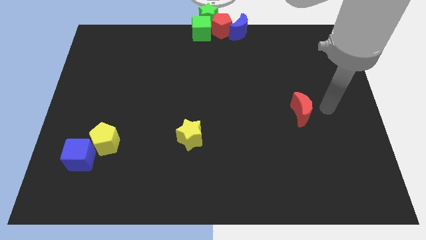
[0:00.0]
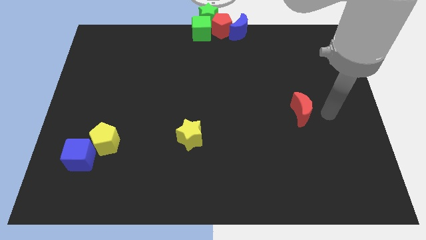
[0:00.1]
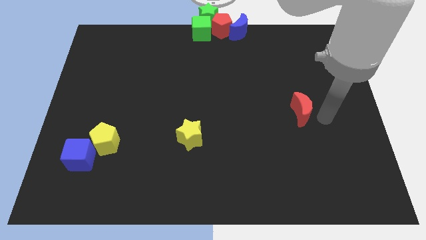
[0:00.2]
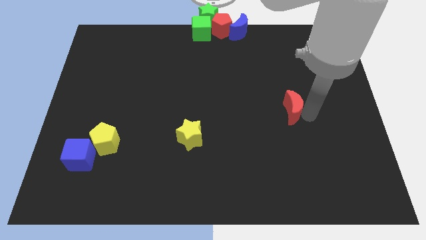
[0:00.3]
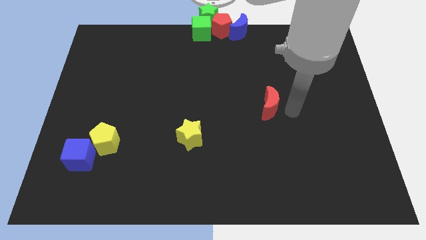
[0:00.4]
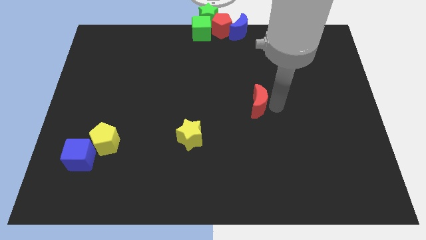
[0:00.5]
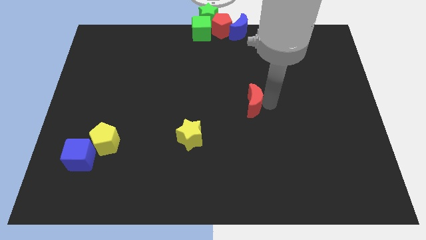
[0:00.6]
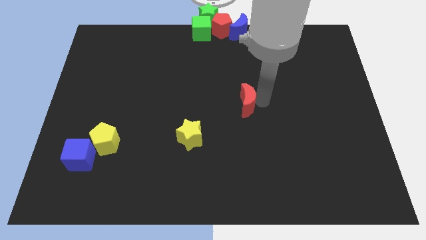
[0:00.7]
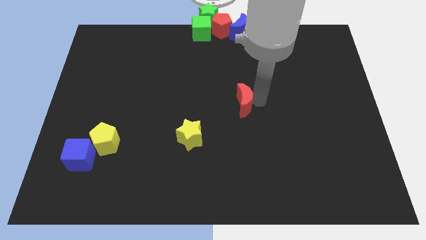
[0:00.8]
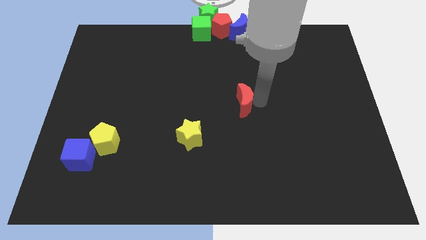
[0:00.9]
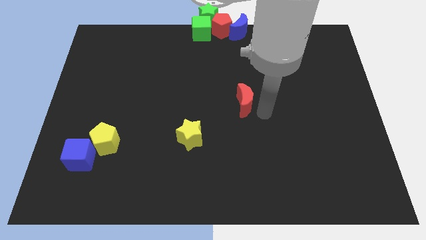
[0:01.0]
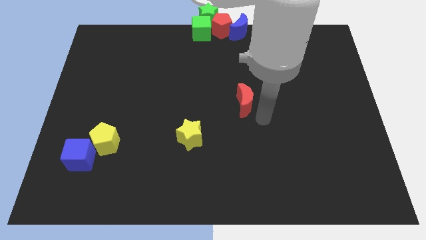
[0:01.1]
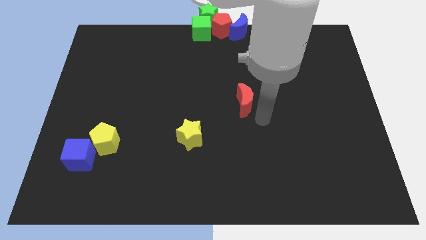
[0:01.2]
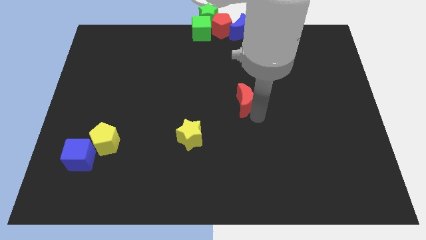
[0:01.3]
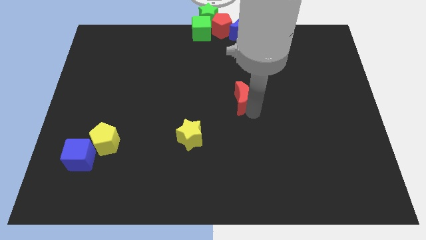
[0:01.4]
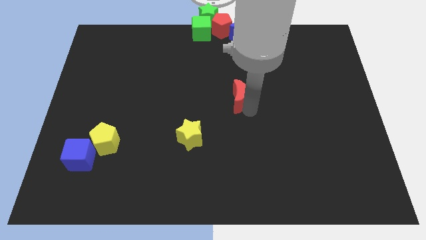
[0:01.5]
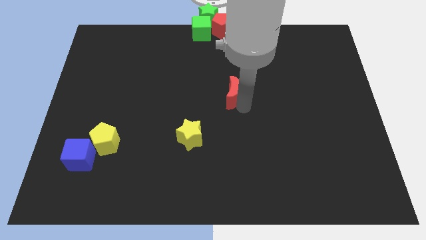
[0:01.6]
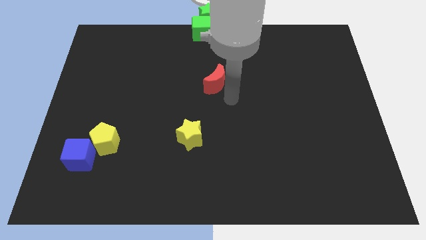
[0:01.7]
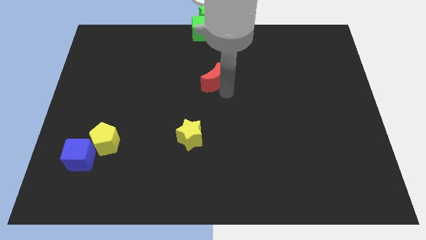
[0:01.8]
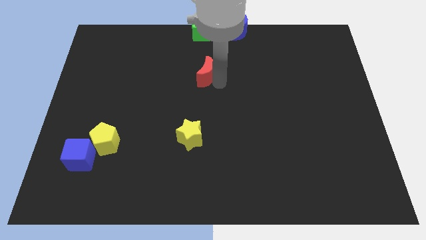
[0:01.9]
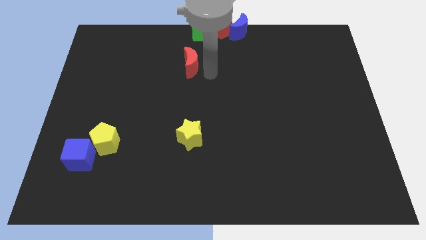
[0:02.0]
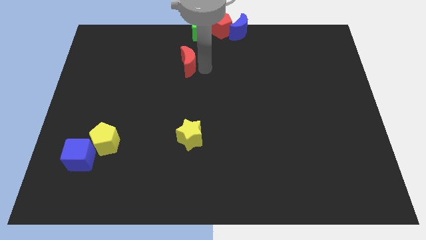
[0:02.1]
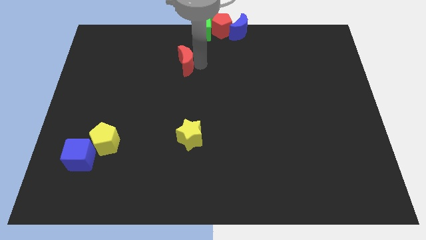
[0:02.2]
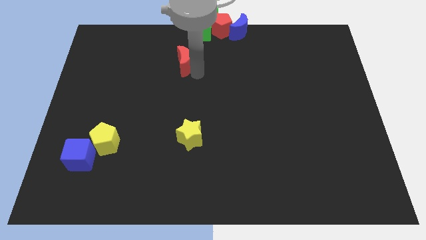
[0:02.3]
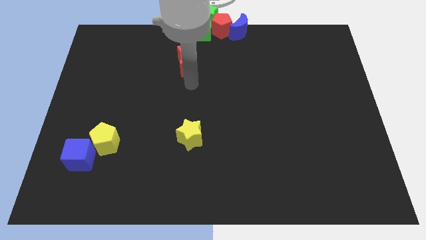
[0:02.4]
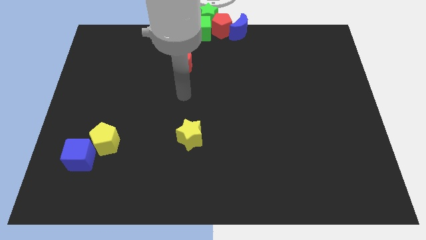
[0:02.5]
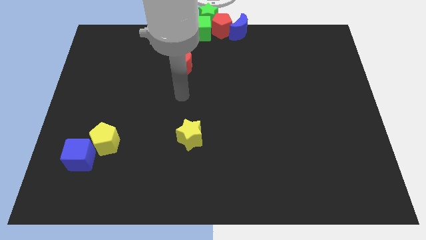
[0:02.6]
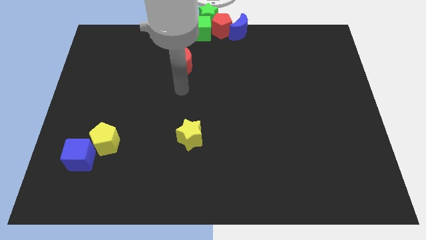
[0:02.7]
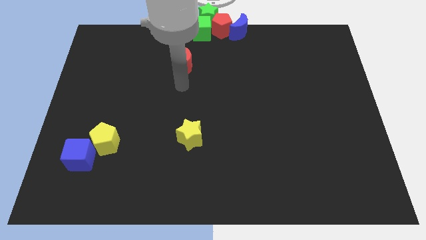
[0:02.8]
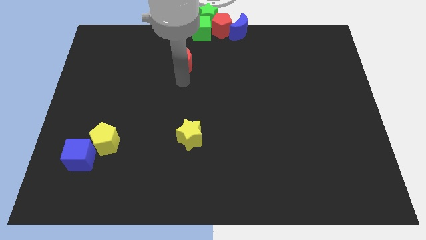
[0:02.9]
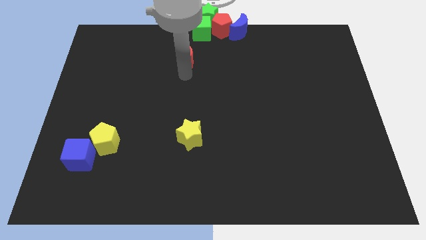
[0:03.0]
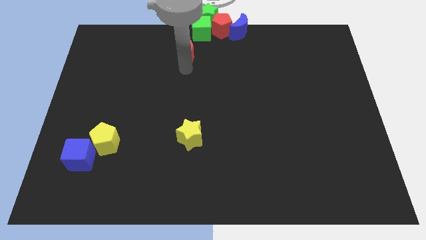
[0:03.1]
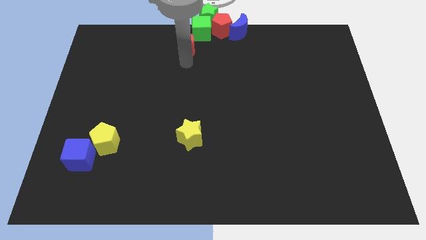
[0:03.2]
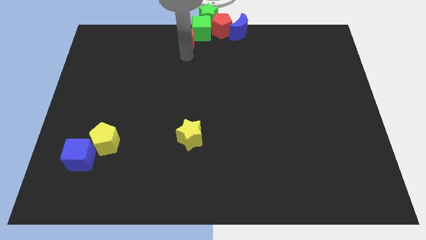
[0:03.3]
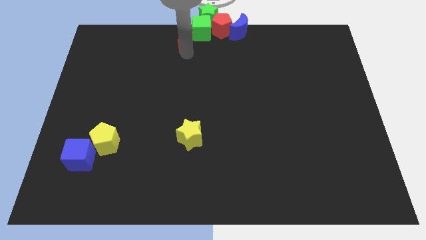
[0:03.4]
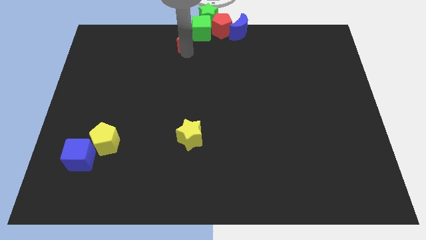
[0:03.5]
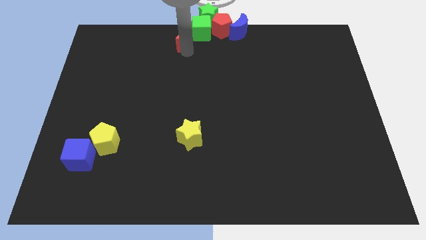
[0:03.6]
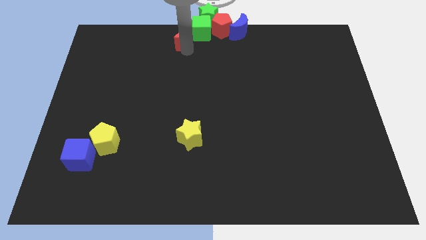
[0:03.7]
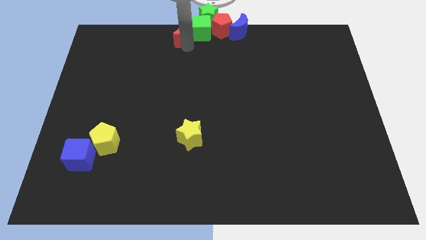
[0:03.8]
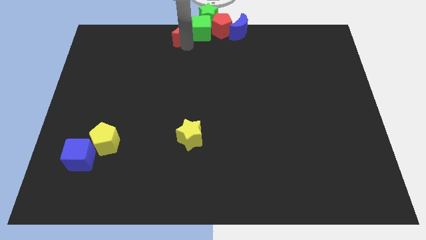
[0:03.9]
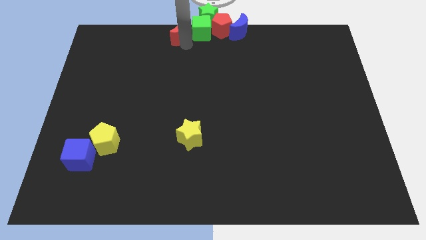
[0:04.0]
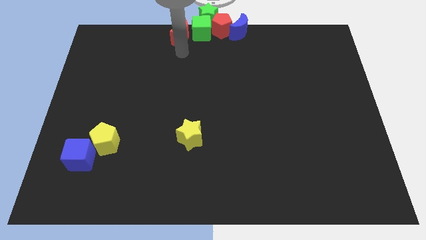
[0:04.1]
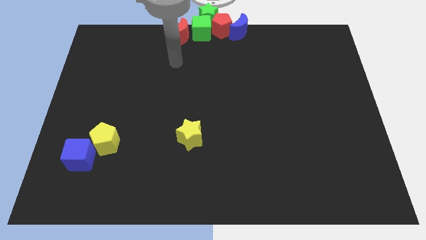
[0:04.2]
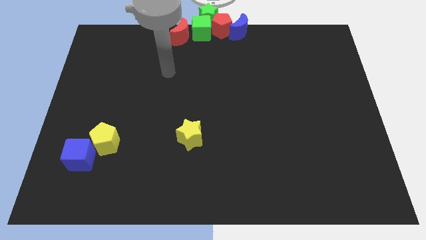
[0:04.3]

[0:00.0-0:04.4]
push the red crescent to the left of the green cube

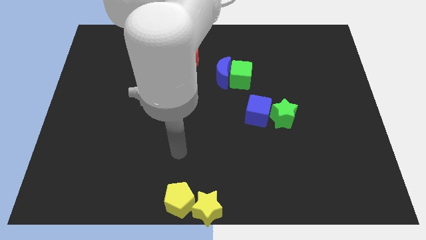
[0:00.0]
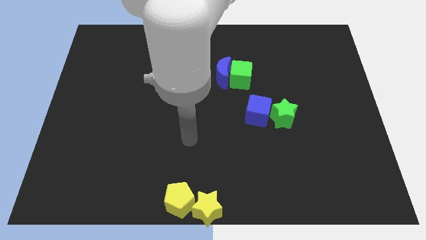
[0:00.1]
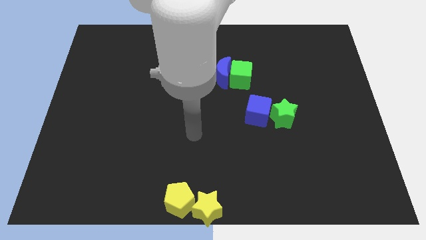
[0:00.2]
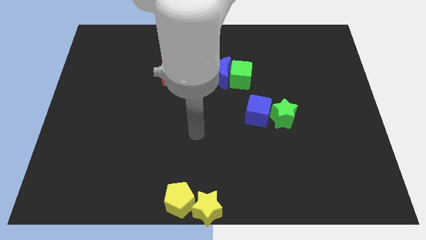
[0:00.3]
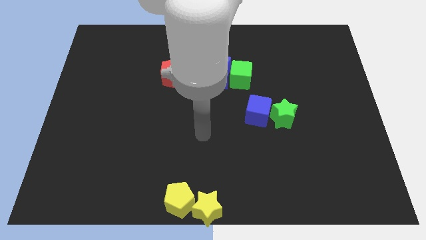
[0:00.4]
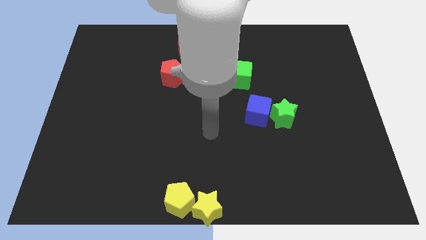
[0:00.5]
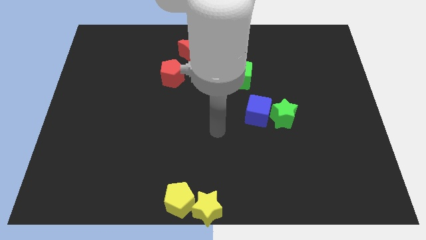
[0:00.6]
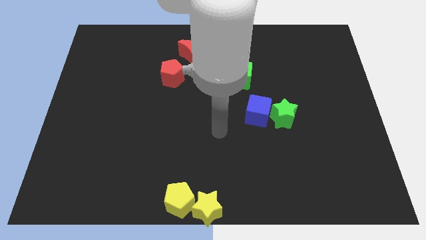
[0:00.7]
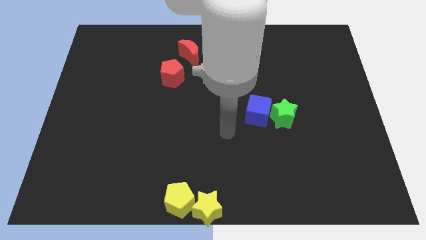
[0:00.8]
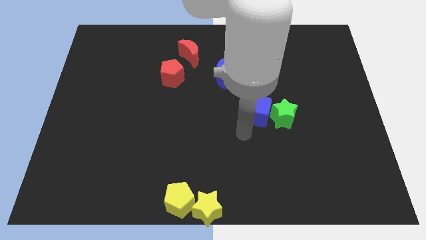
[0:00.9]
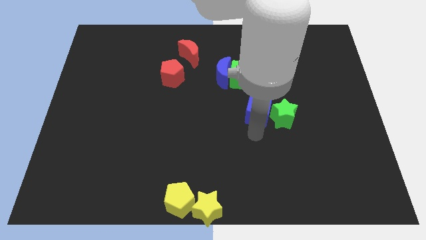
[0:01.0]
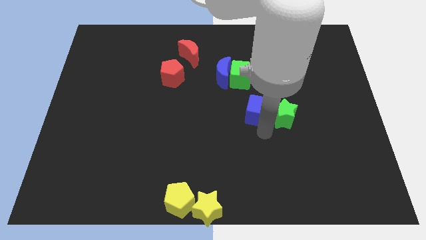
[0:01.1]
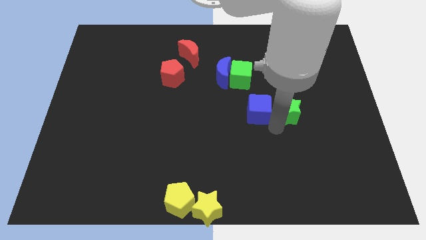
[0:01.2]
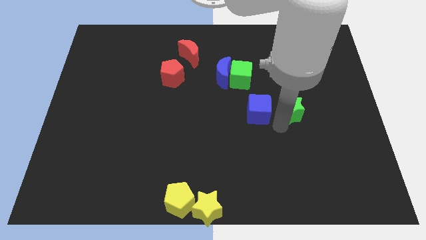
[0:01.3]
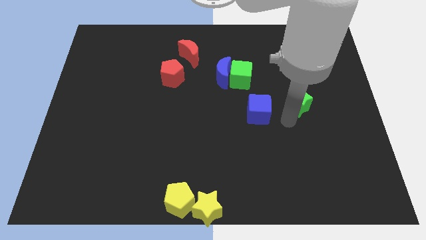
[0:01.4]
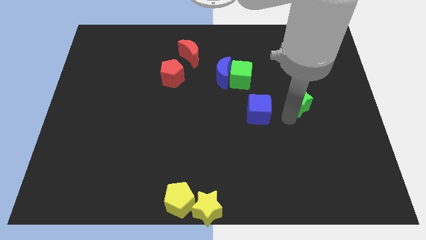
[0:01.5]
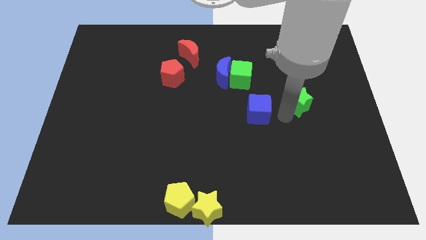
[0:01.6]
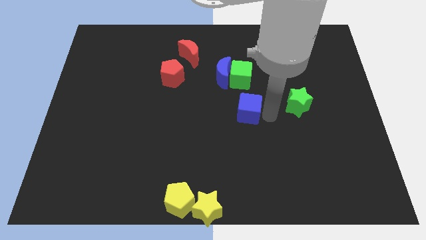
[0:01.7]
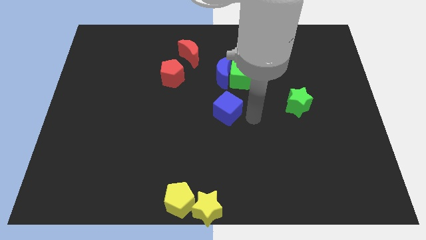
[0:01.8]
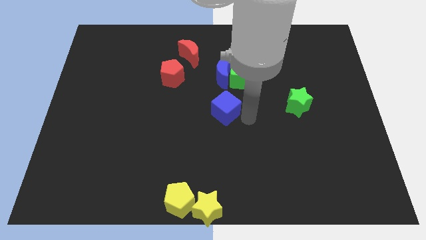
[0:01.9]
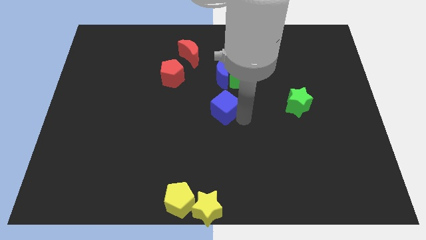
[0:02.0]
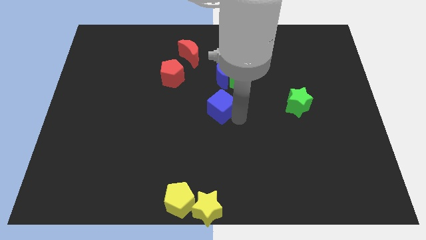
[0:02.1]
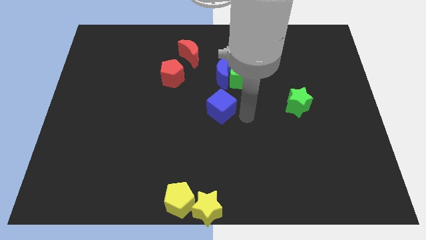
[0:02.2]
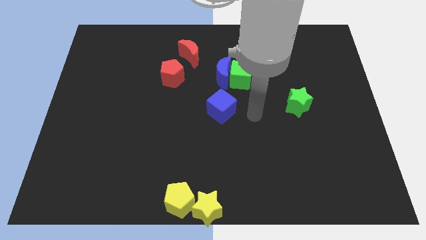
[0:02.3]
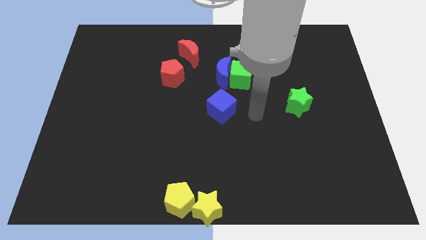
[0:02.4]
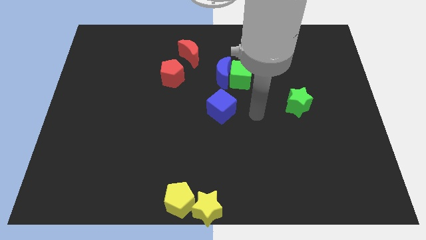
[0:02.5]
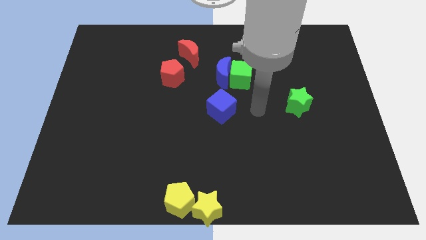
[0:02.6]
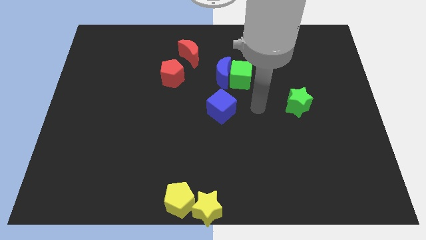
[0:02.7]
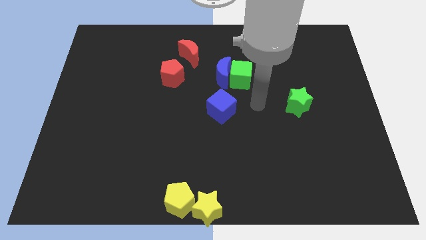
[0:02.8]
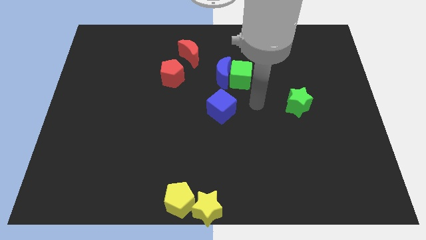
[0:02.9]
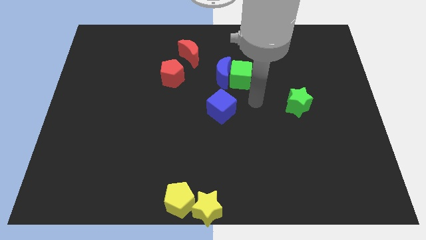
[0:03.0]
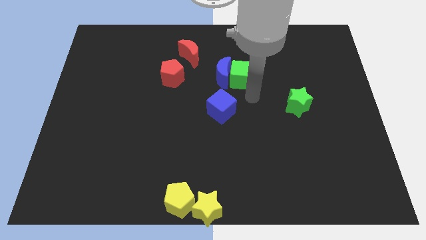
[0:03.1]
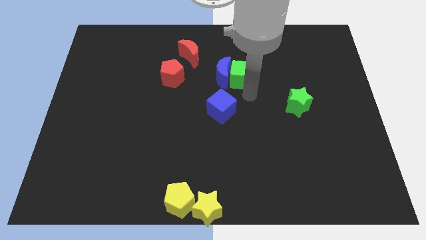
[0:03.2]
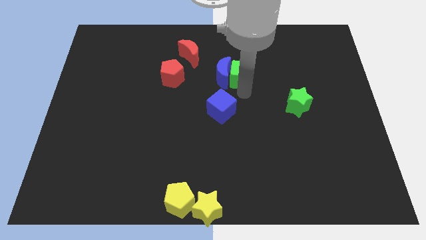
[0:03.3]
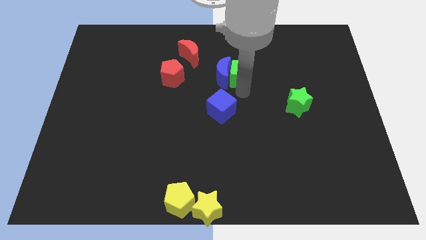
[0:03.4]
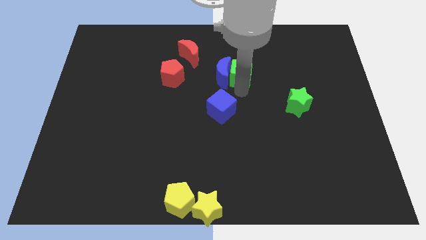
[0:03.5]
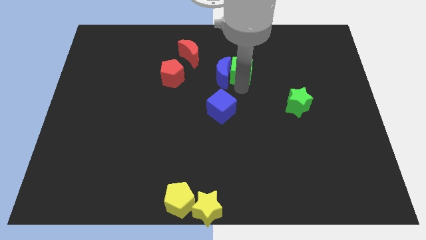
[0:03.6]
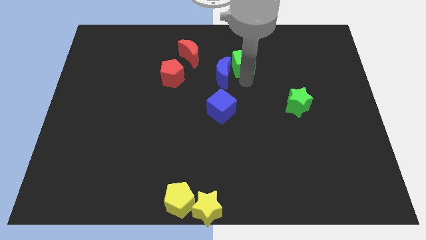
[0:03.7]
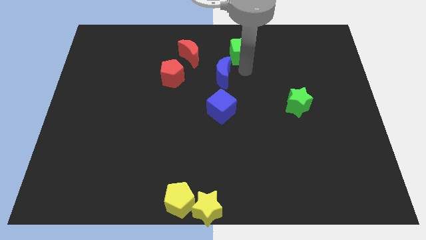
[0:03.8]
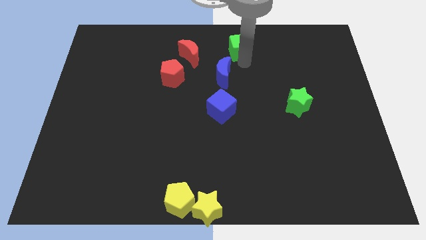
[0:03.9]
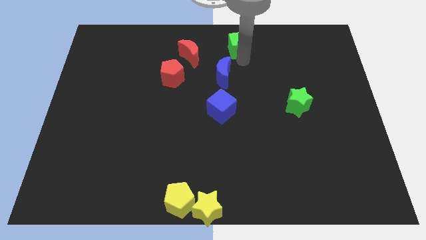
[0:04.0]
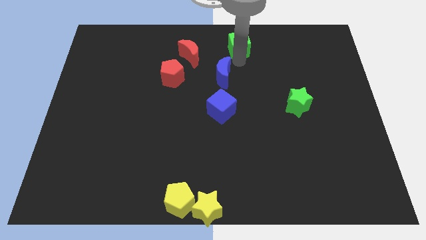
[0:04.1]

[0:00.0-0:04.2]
push the green cube on top center

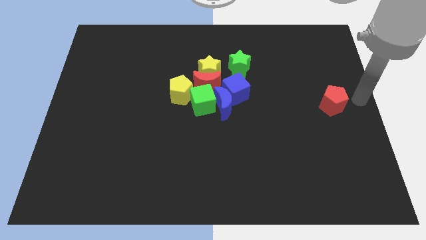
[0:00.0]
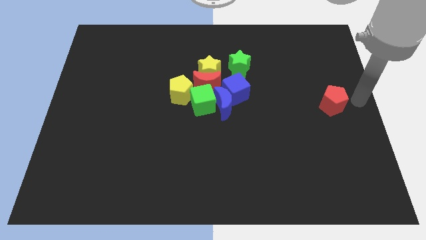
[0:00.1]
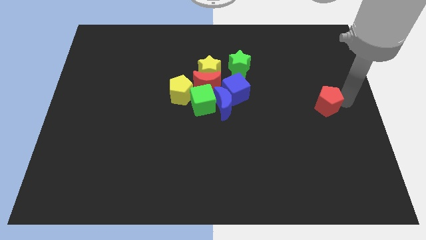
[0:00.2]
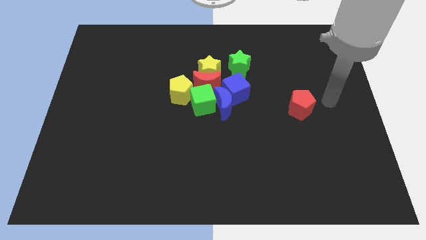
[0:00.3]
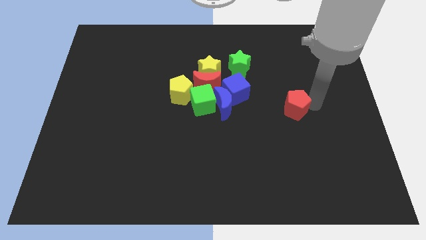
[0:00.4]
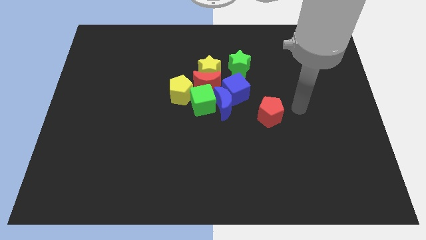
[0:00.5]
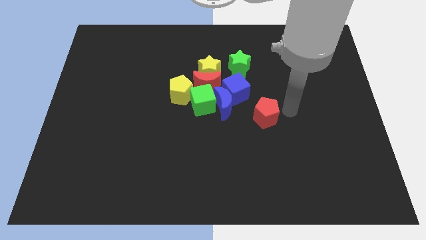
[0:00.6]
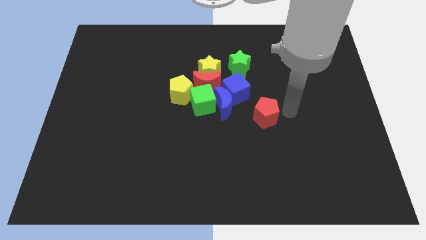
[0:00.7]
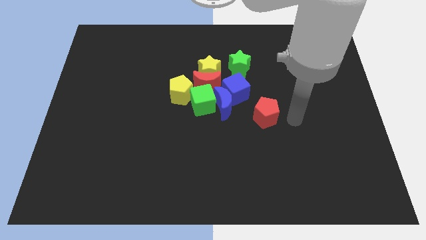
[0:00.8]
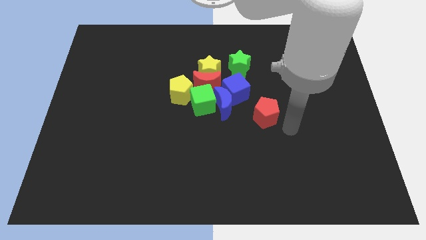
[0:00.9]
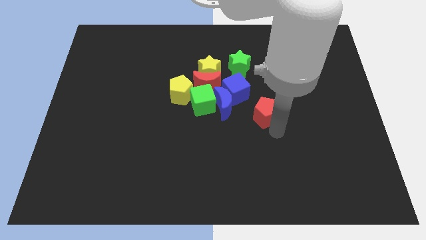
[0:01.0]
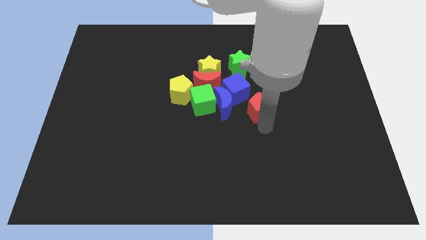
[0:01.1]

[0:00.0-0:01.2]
place the red pentagon diagonally to the bottom right of the blue cube
